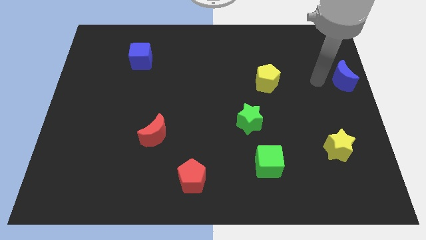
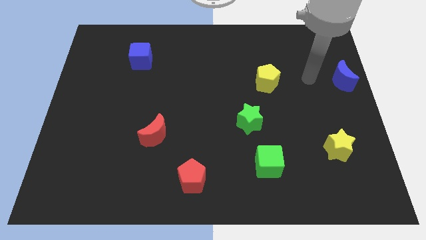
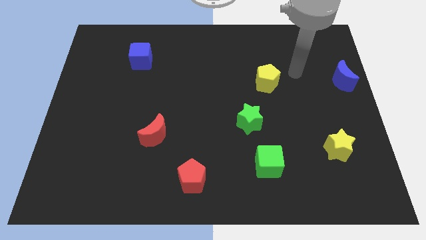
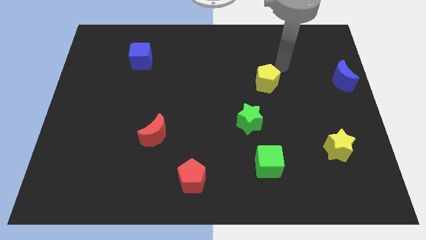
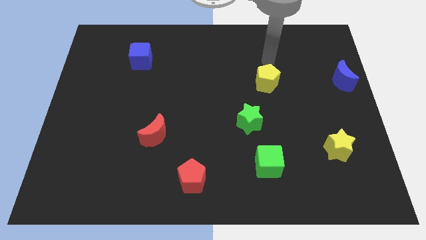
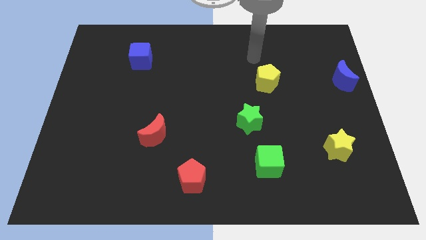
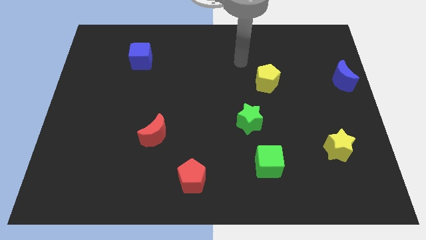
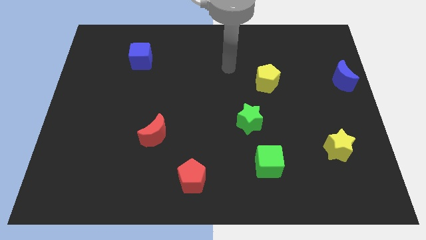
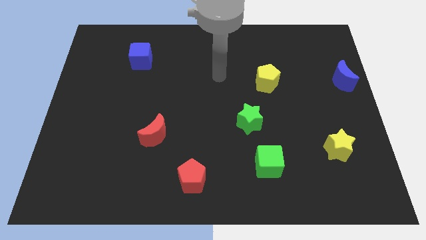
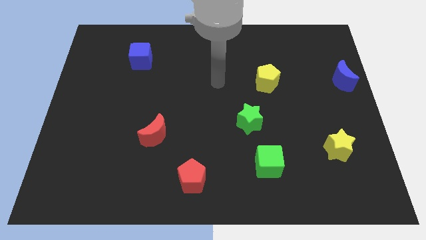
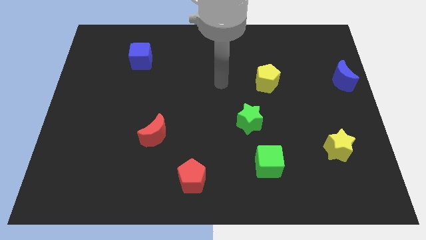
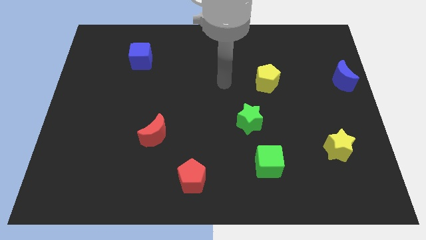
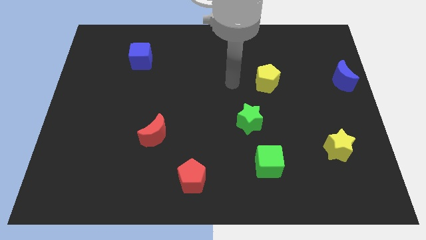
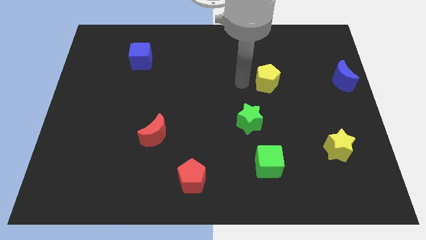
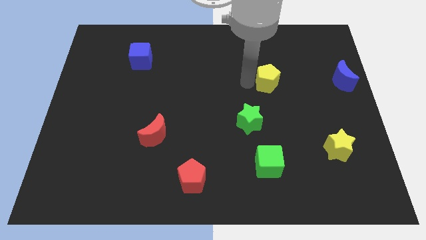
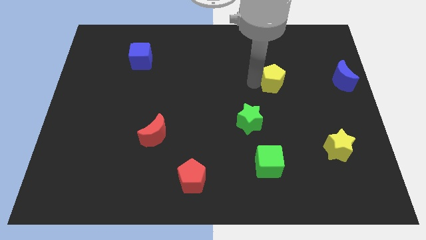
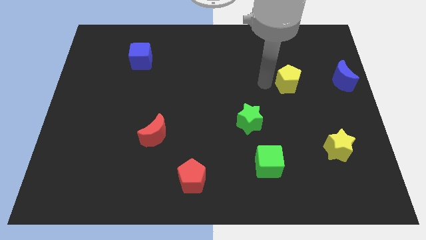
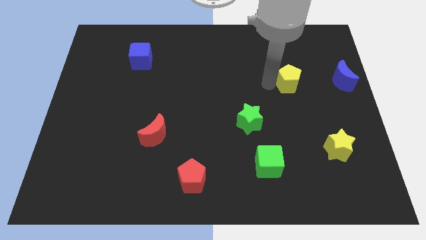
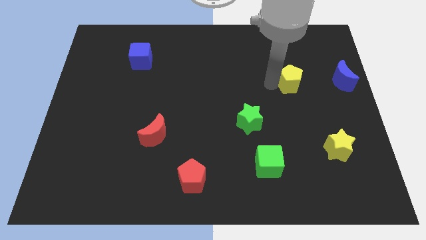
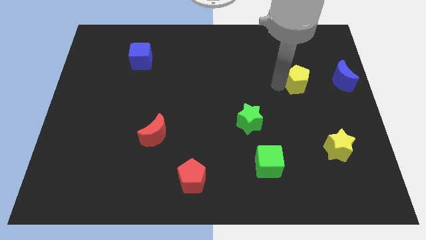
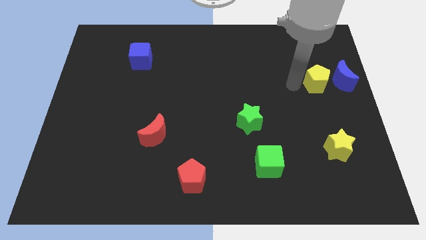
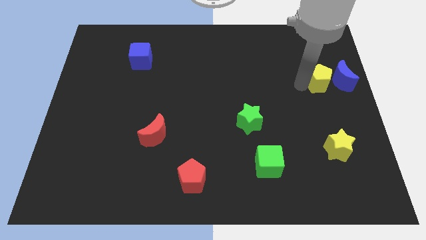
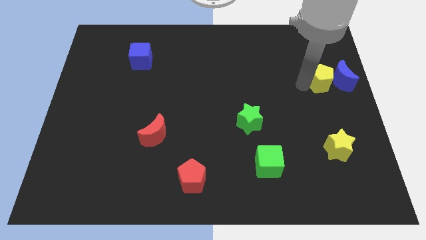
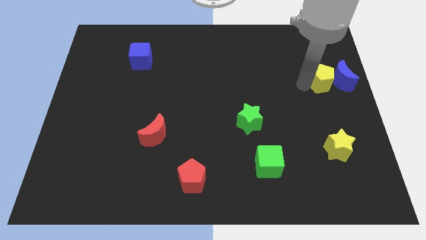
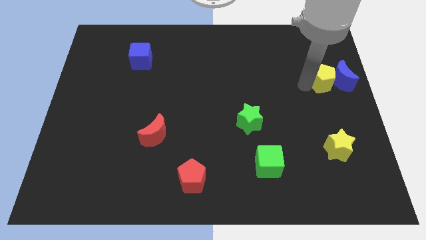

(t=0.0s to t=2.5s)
move the yellow pentagon to the left of the blue crescent

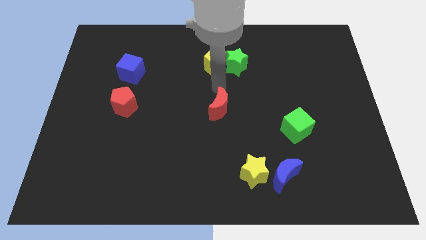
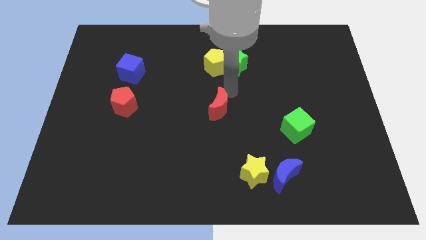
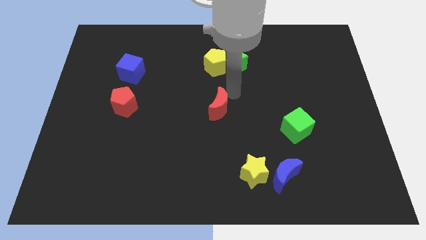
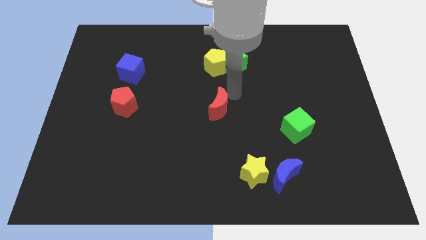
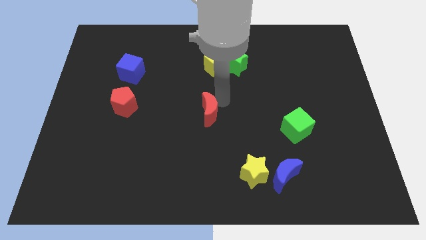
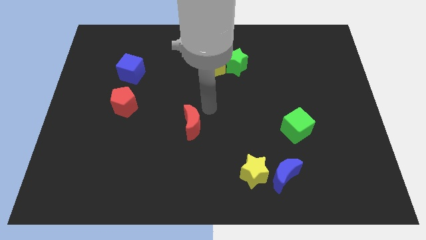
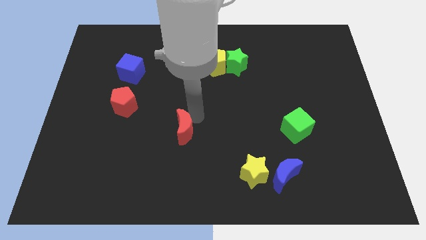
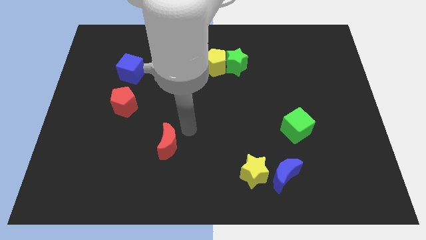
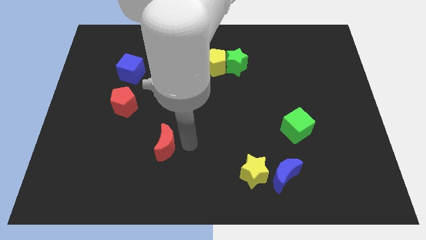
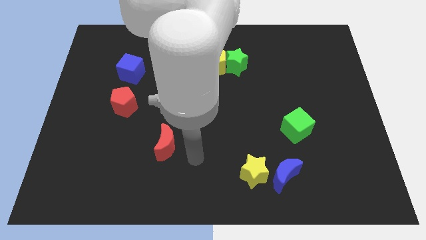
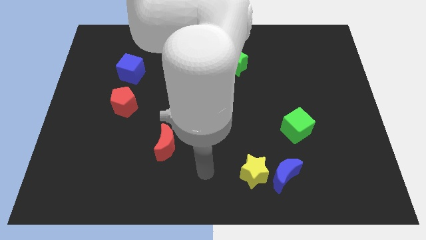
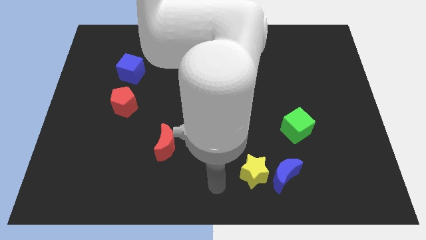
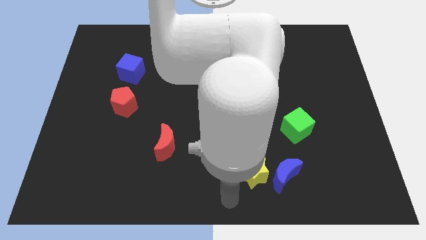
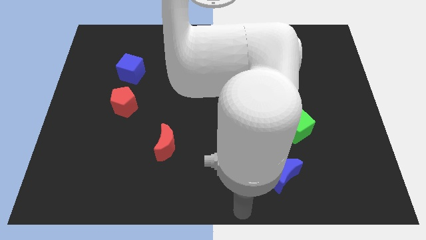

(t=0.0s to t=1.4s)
move the red moon to the left side slightly

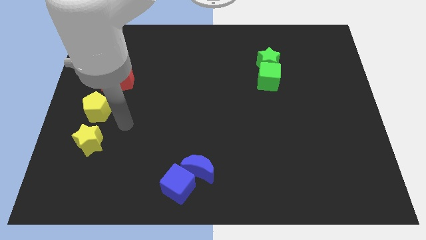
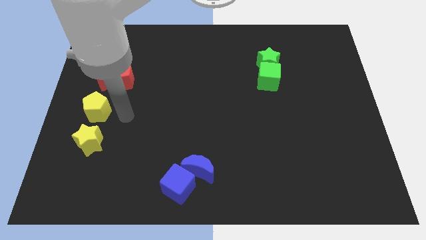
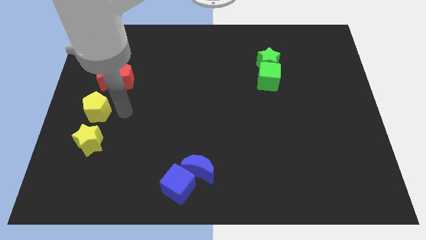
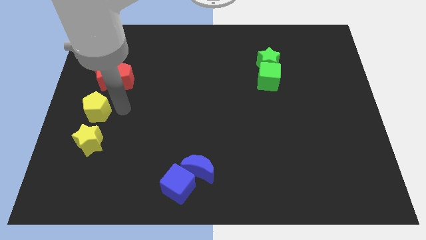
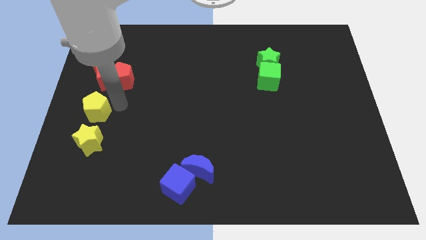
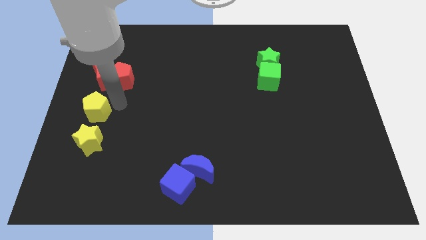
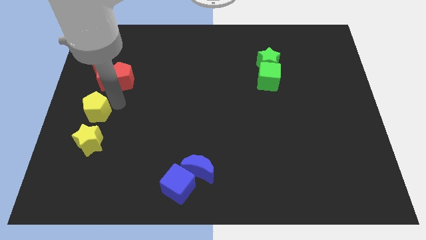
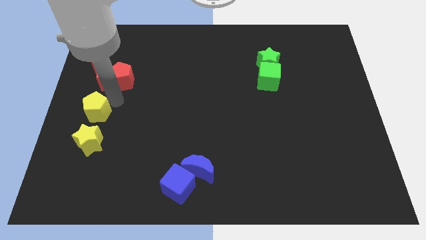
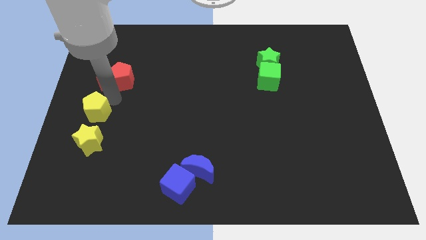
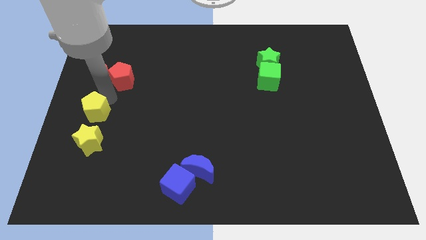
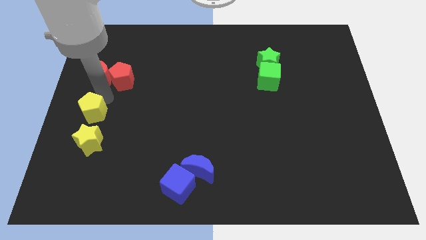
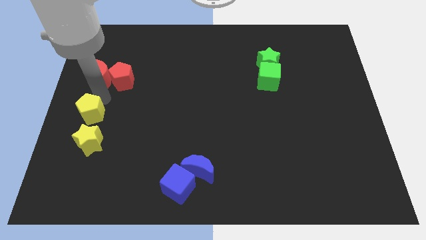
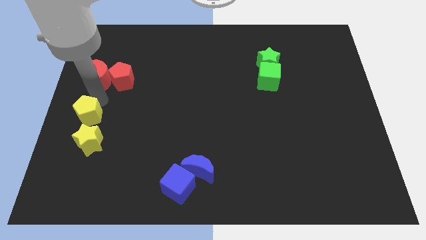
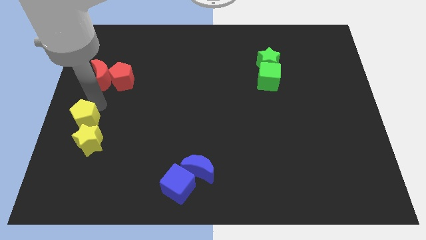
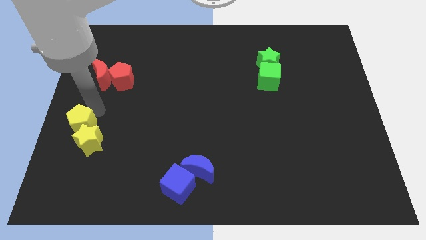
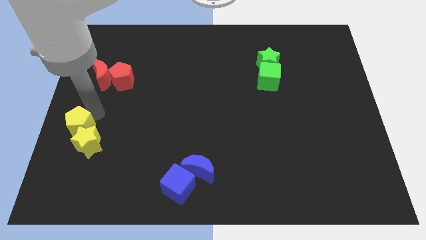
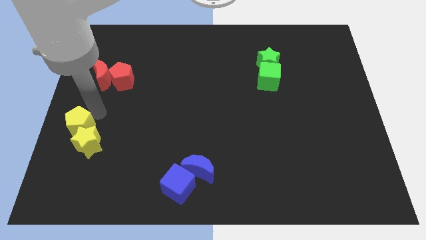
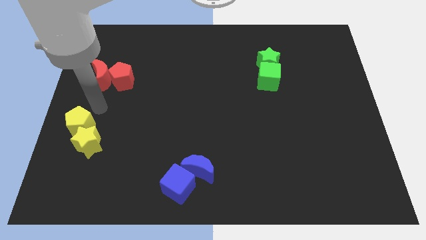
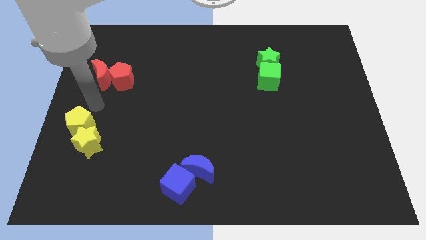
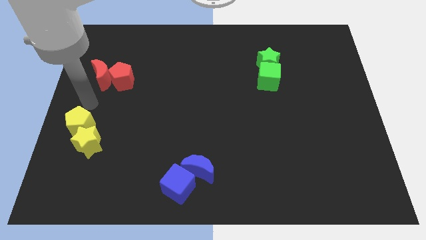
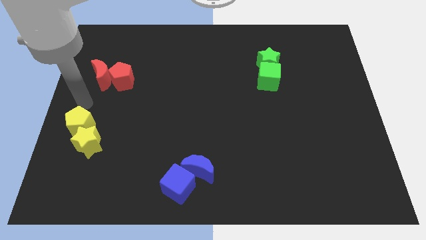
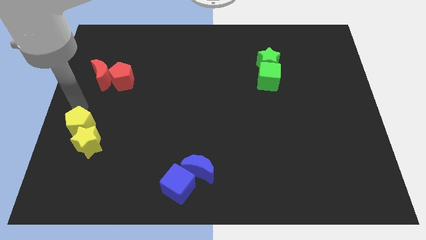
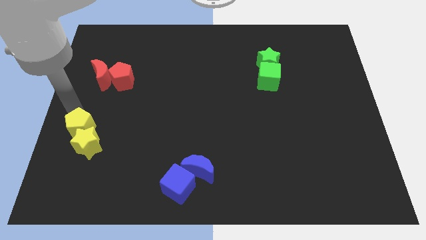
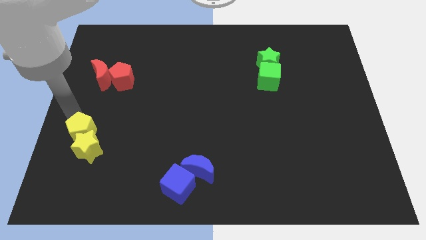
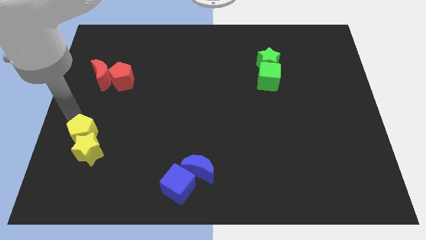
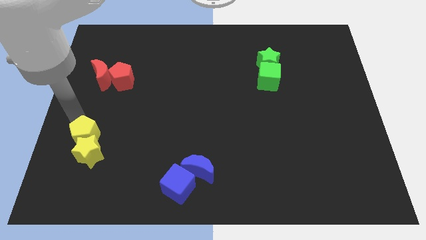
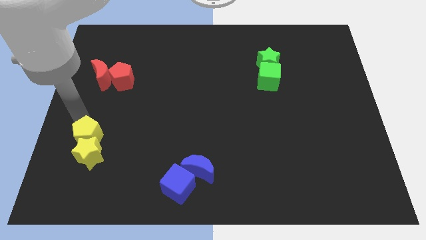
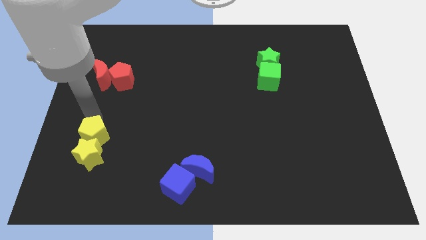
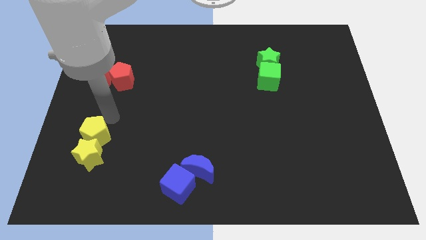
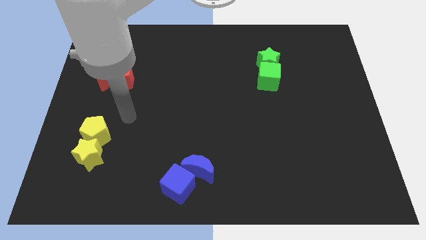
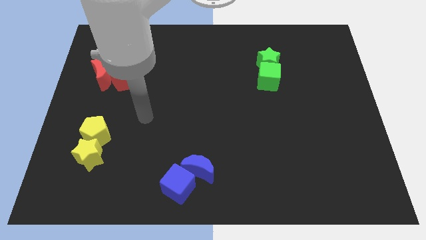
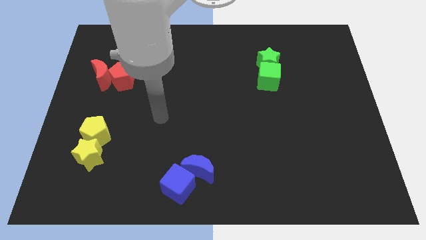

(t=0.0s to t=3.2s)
push the yellow pentagon into the yellow star

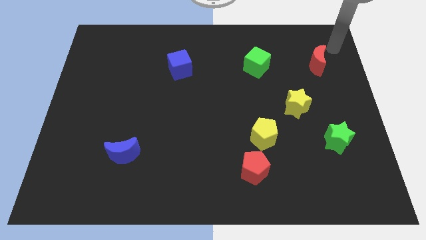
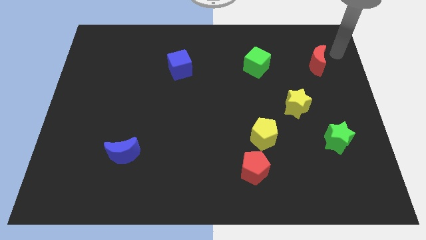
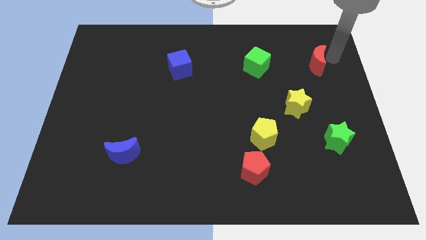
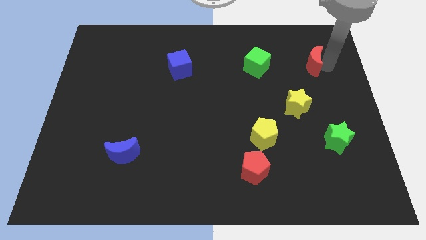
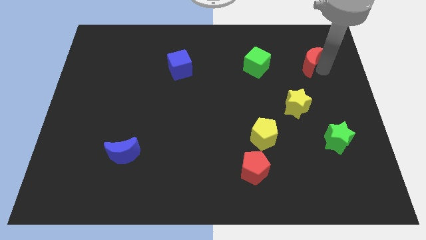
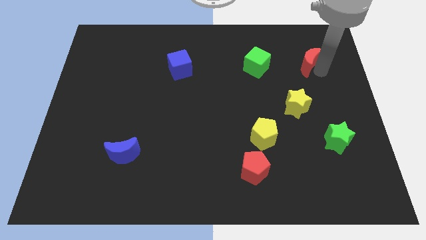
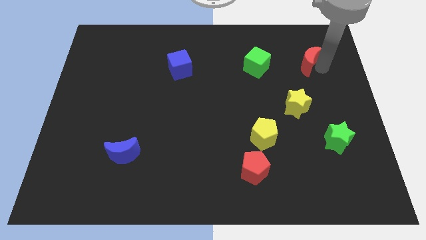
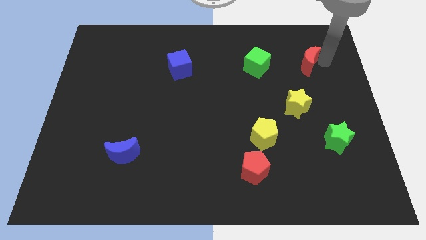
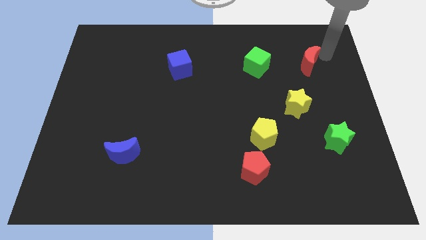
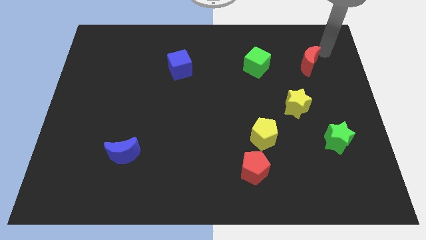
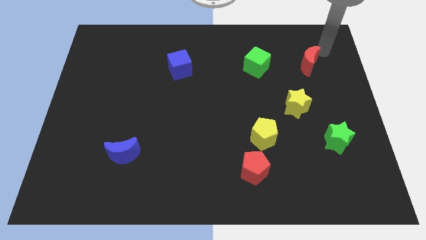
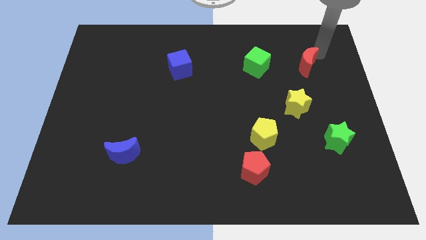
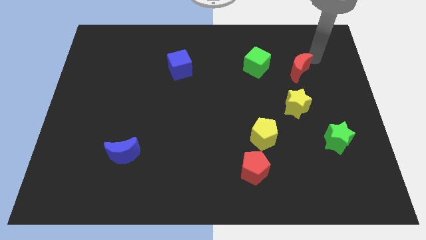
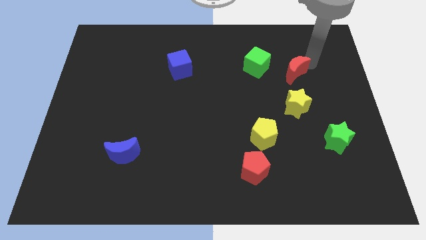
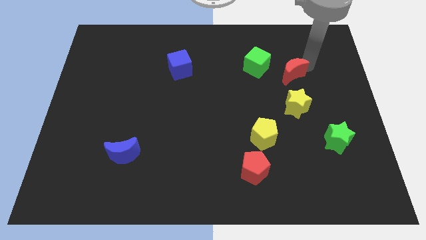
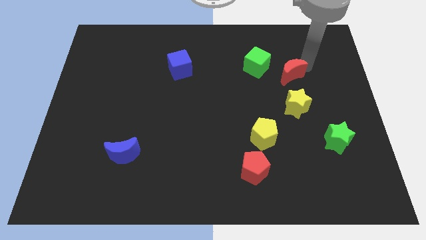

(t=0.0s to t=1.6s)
move red moon to the right of green cube
